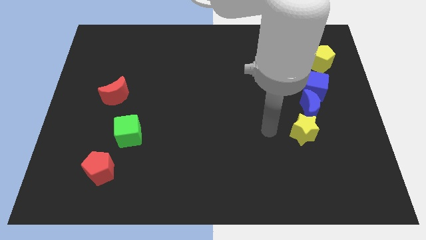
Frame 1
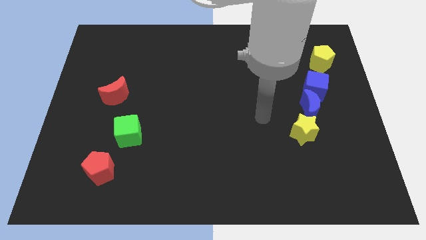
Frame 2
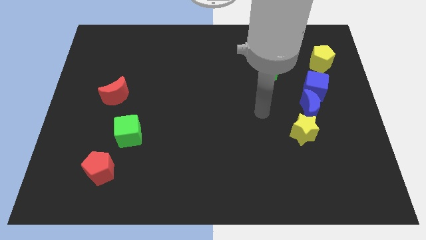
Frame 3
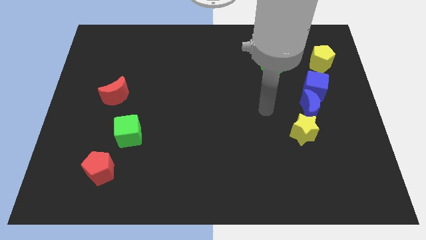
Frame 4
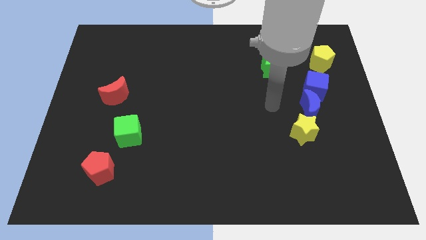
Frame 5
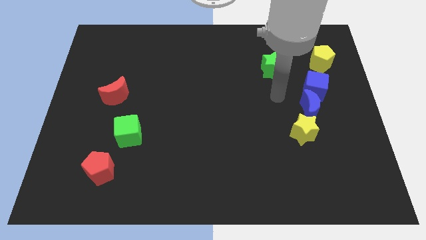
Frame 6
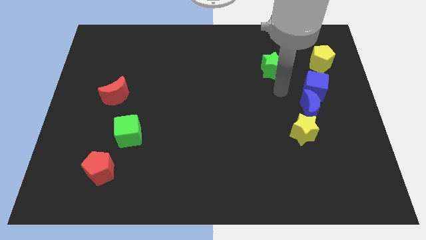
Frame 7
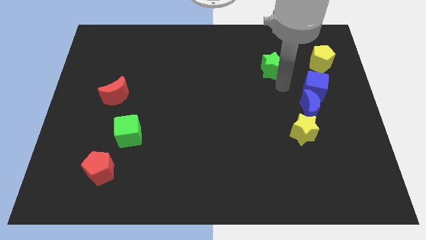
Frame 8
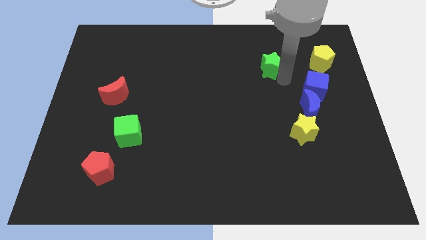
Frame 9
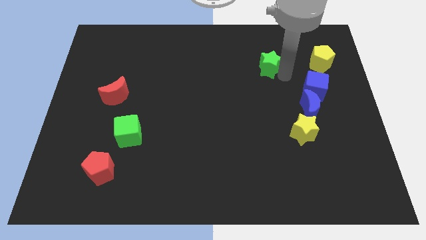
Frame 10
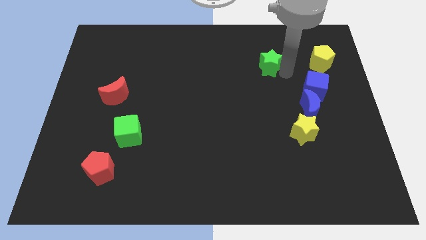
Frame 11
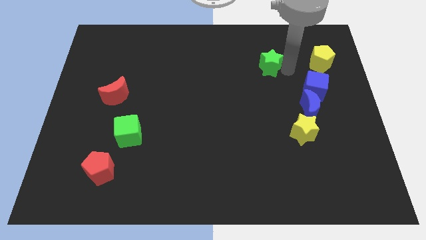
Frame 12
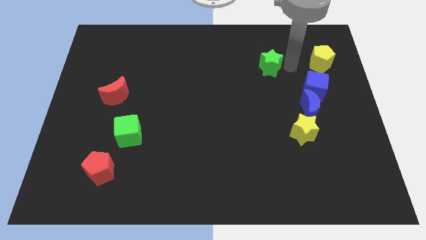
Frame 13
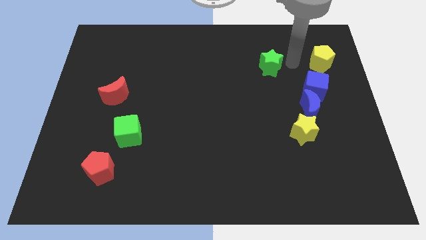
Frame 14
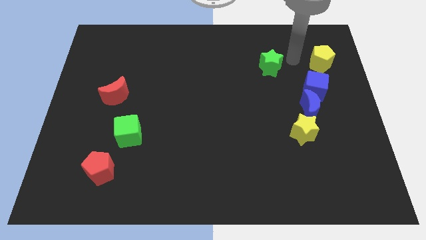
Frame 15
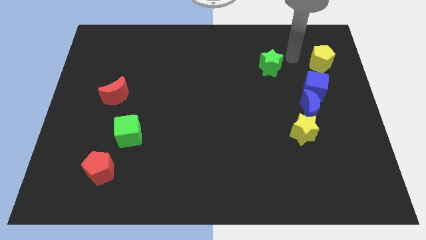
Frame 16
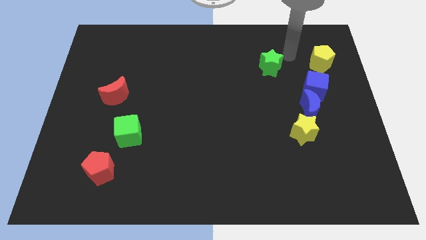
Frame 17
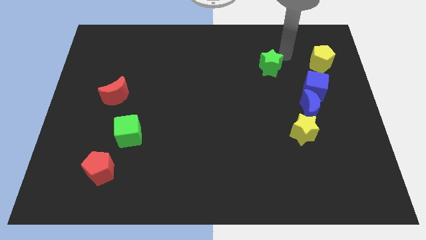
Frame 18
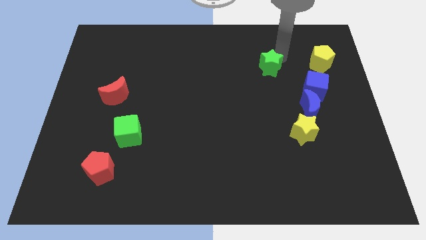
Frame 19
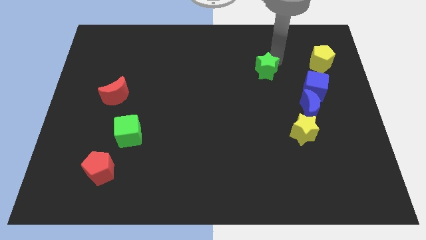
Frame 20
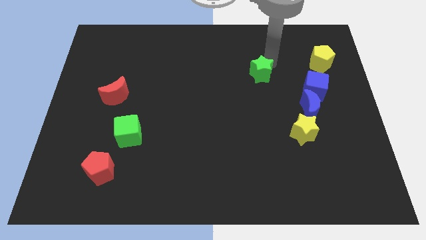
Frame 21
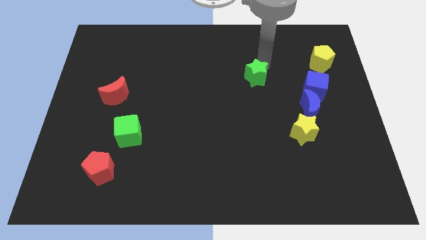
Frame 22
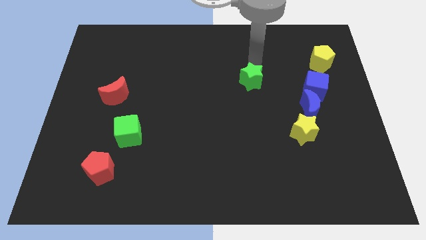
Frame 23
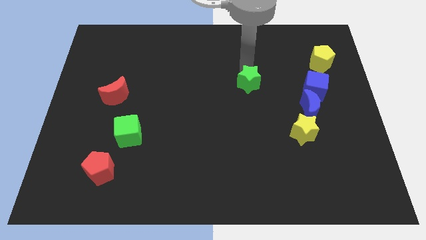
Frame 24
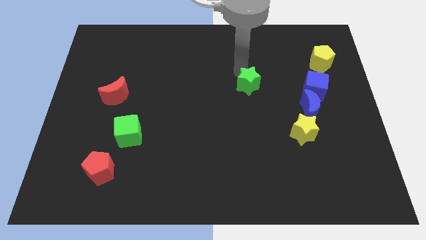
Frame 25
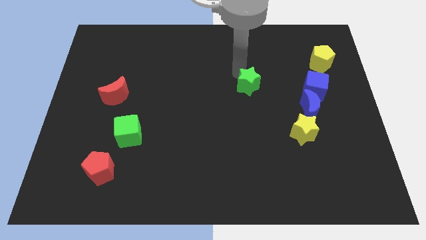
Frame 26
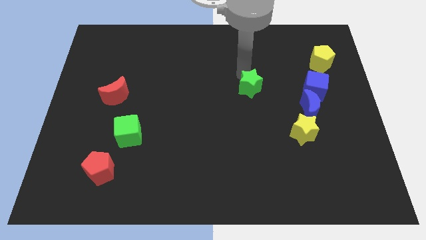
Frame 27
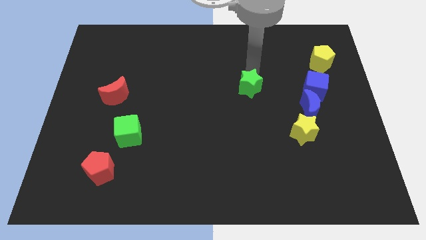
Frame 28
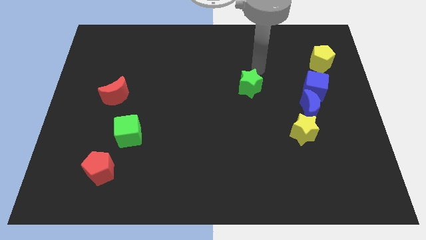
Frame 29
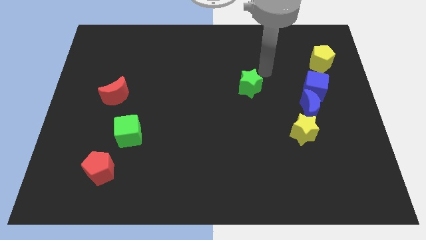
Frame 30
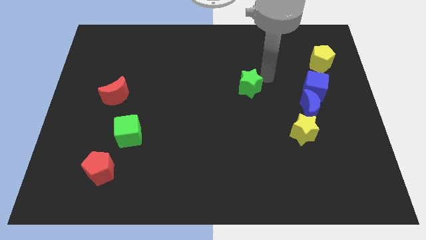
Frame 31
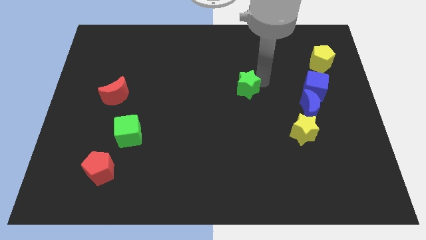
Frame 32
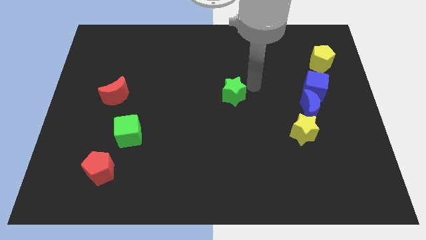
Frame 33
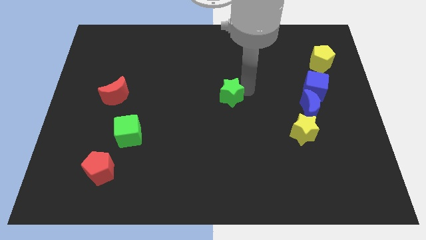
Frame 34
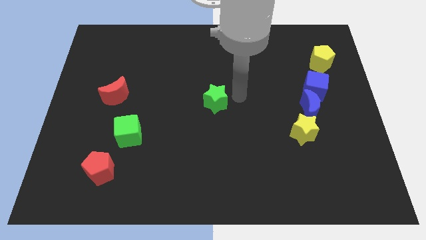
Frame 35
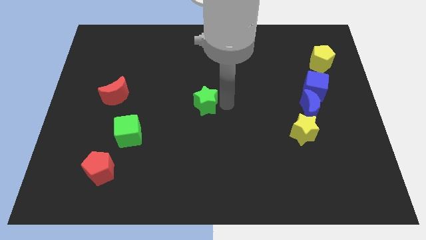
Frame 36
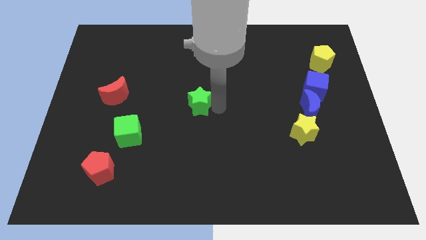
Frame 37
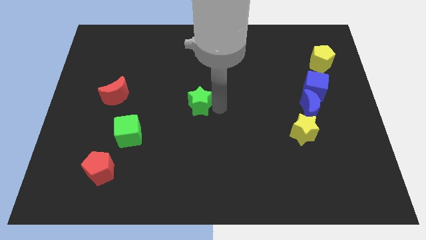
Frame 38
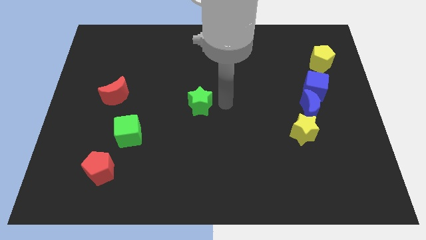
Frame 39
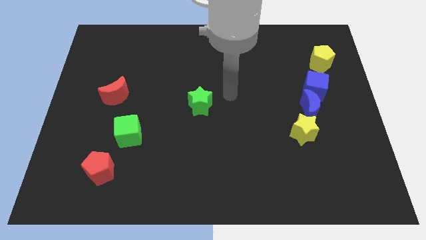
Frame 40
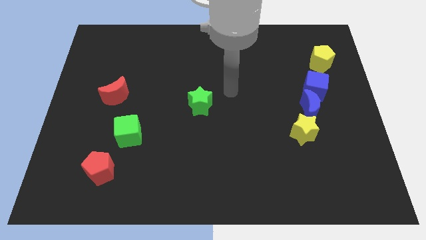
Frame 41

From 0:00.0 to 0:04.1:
move the green star slightly left

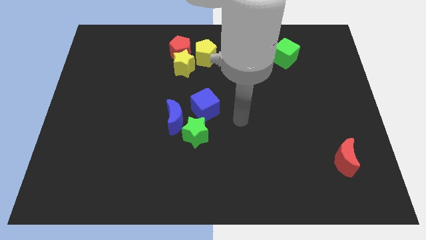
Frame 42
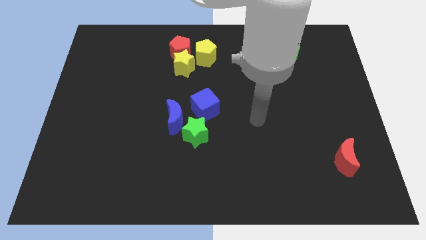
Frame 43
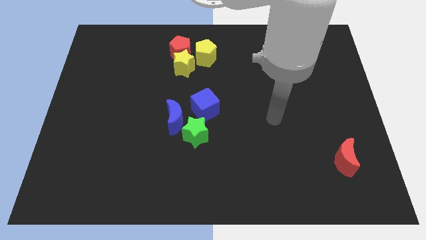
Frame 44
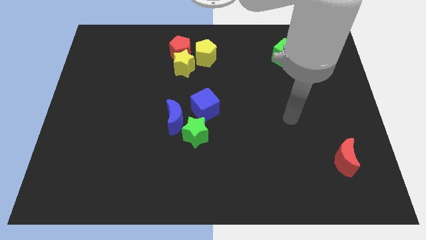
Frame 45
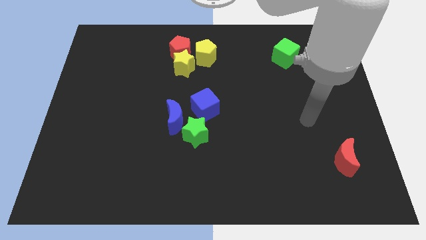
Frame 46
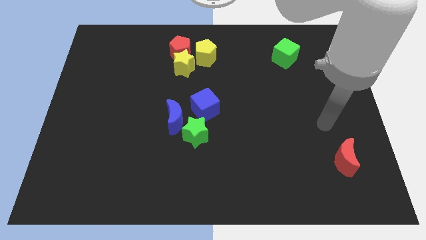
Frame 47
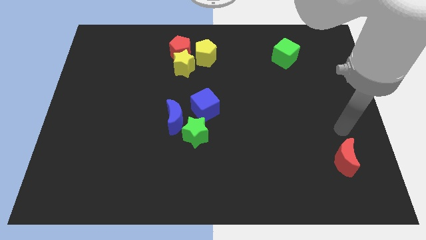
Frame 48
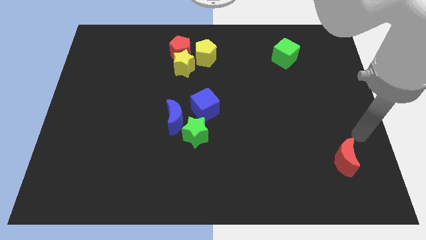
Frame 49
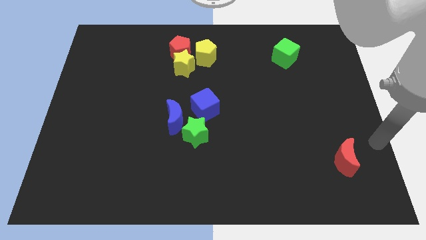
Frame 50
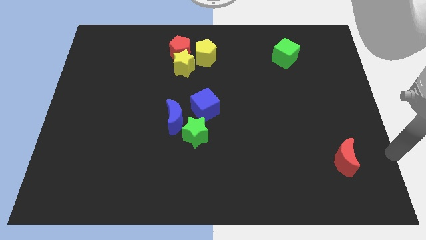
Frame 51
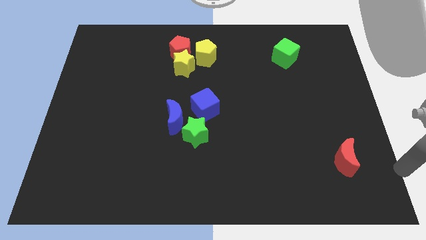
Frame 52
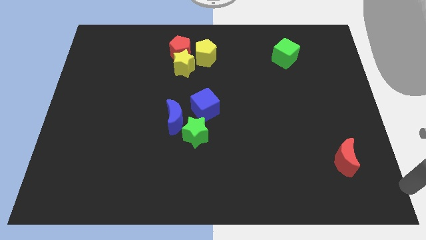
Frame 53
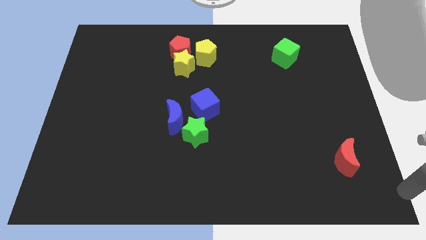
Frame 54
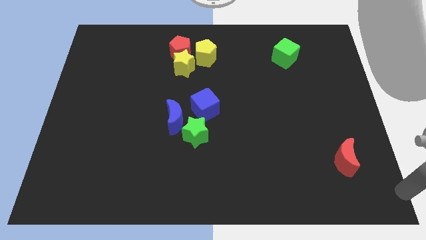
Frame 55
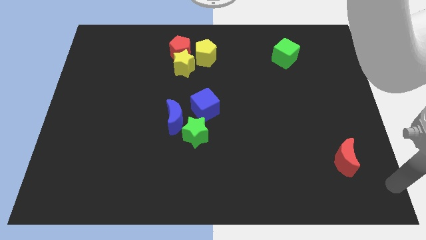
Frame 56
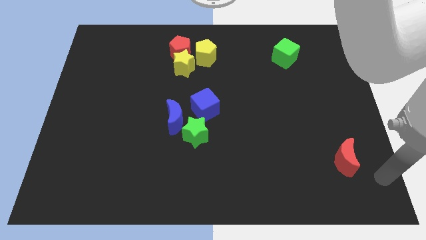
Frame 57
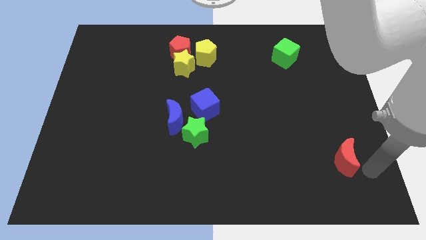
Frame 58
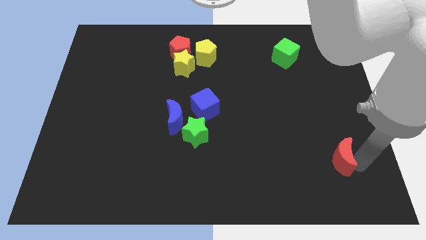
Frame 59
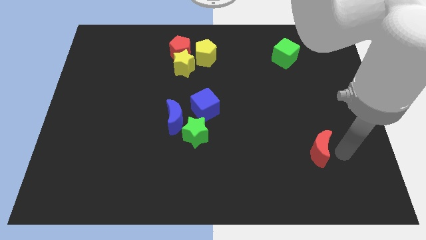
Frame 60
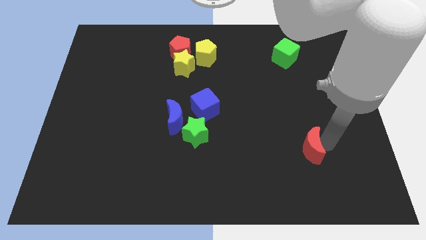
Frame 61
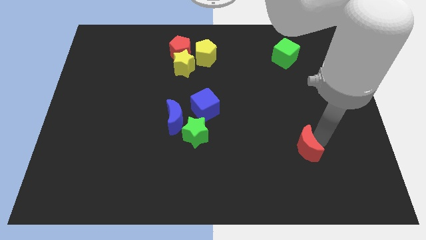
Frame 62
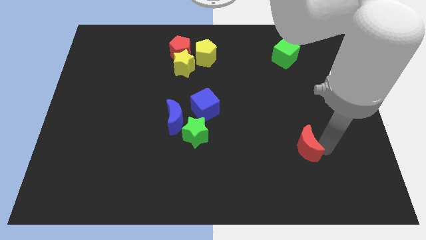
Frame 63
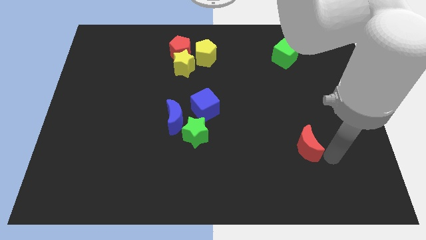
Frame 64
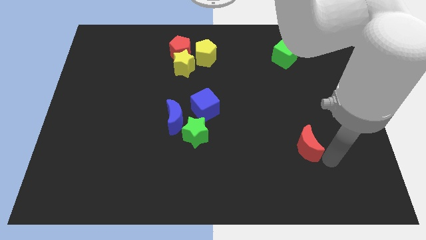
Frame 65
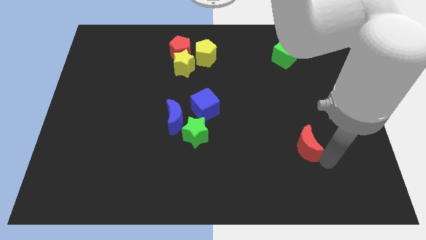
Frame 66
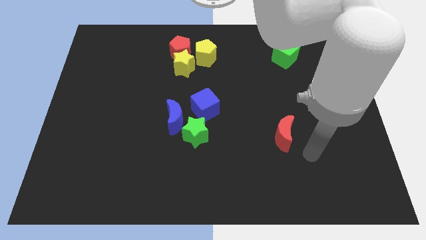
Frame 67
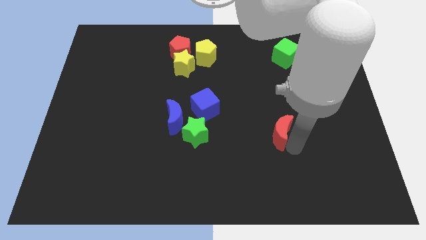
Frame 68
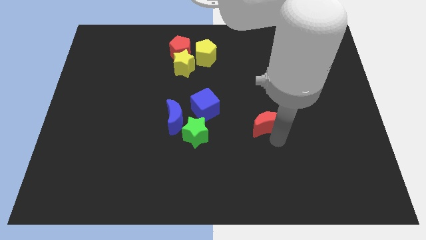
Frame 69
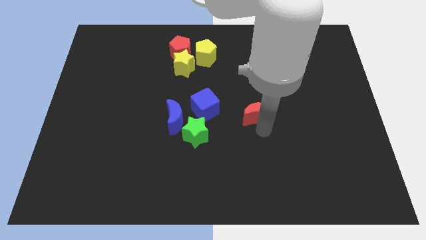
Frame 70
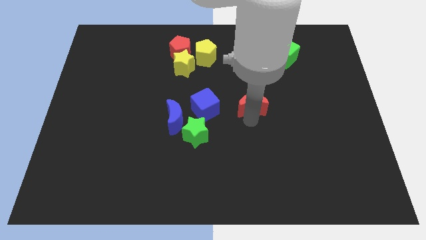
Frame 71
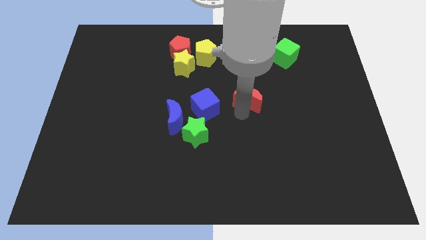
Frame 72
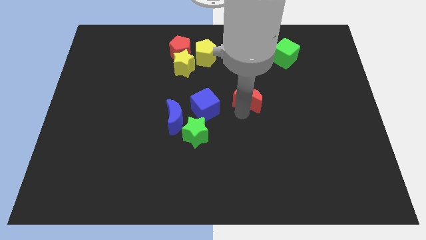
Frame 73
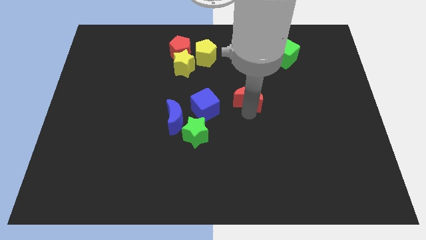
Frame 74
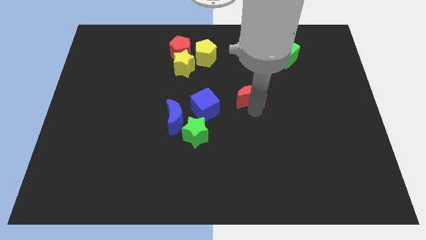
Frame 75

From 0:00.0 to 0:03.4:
slide the red crescent diagonally bottom left to the green cube

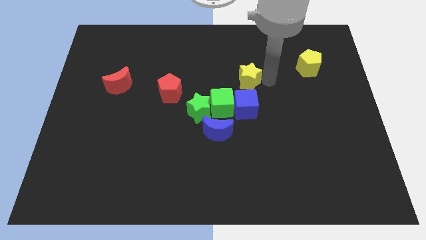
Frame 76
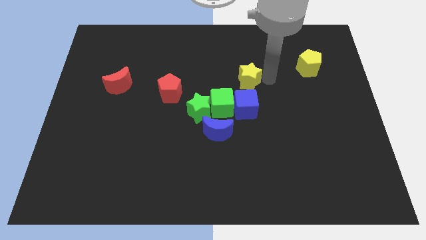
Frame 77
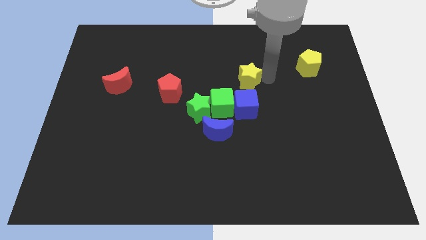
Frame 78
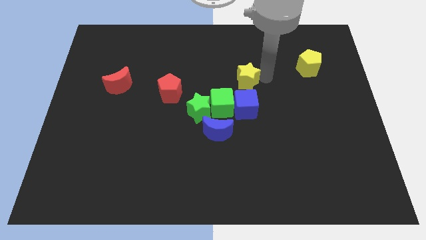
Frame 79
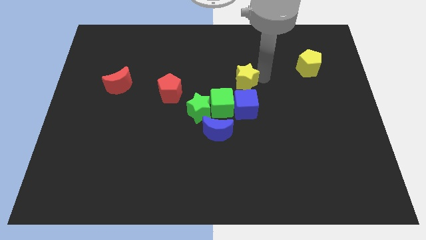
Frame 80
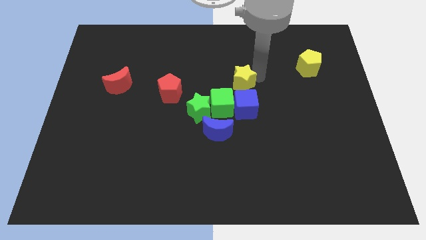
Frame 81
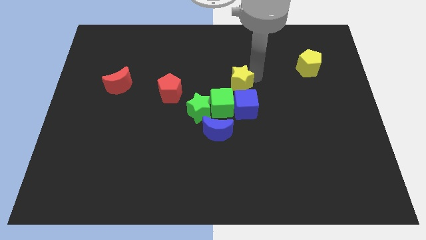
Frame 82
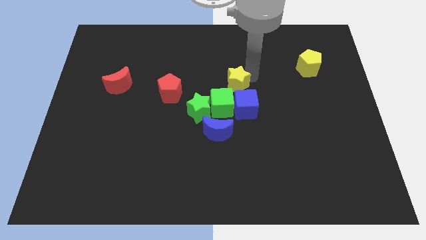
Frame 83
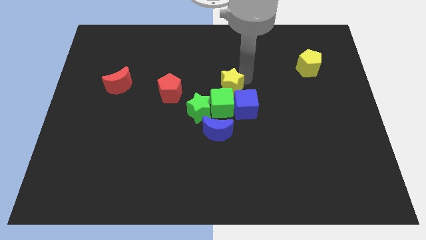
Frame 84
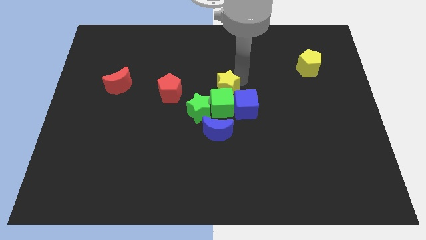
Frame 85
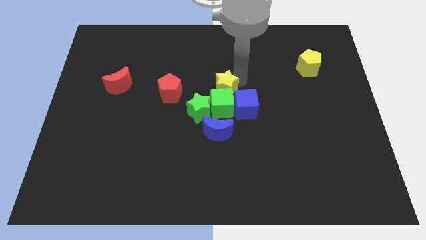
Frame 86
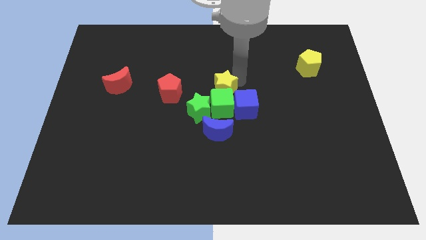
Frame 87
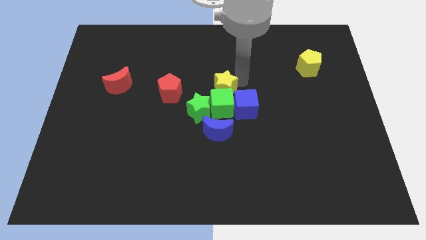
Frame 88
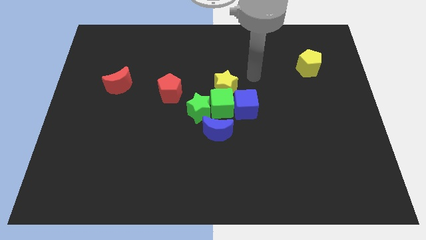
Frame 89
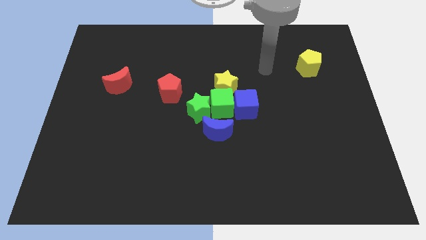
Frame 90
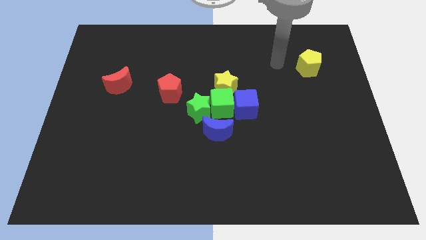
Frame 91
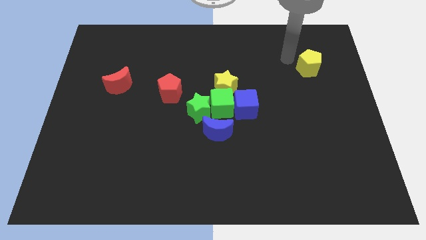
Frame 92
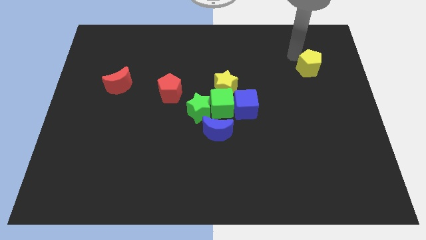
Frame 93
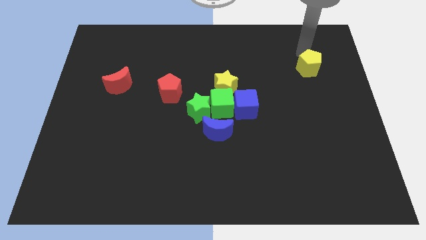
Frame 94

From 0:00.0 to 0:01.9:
place the yellow star on the top of the green cube
